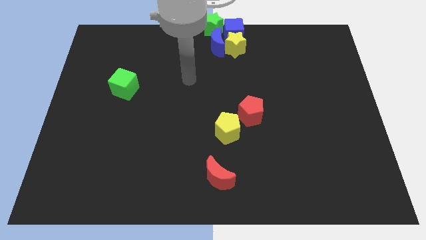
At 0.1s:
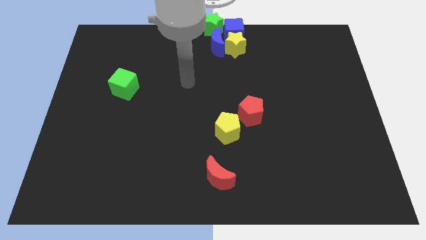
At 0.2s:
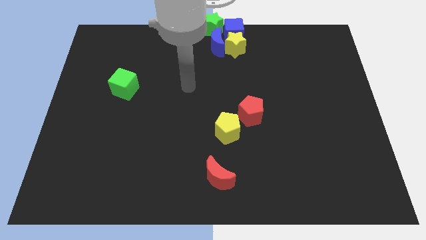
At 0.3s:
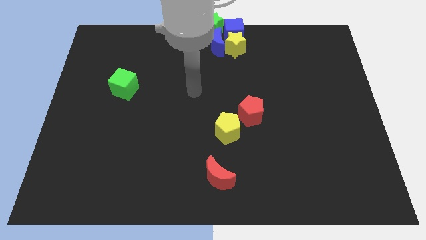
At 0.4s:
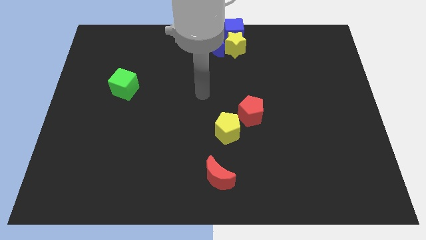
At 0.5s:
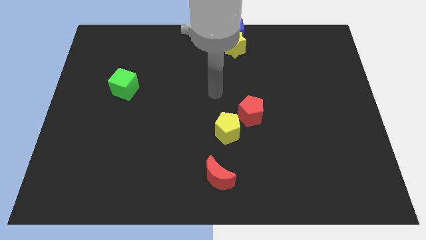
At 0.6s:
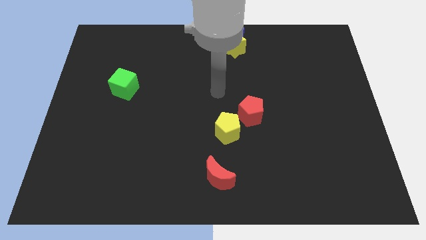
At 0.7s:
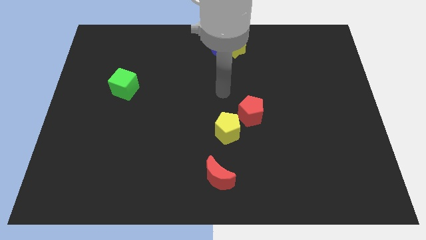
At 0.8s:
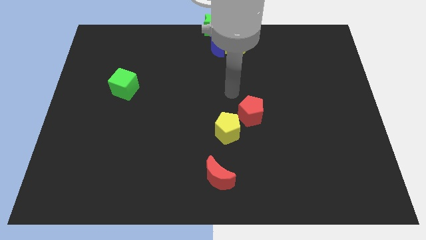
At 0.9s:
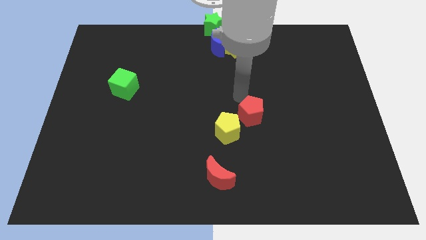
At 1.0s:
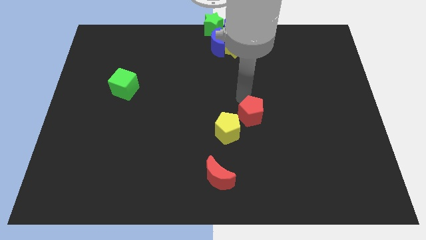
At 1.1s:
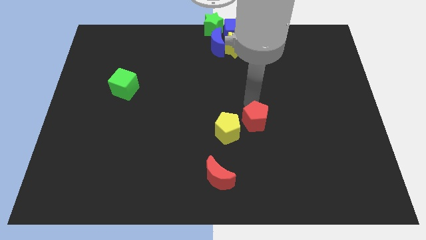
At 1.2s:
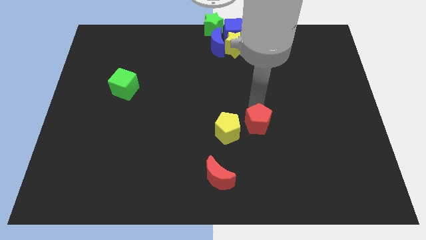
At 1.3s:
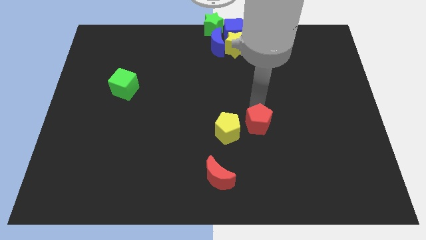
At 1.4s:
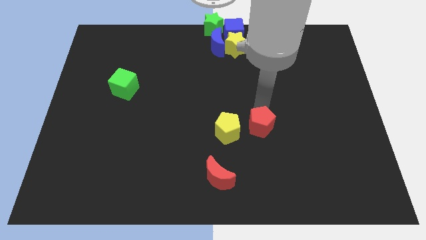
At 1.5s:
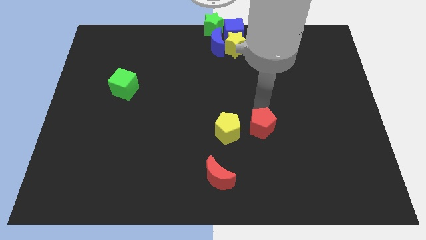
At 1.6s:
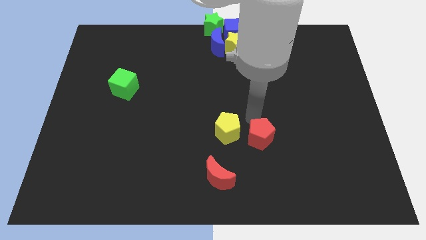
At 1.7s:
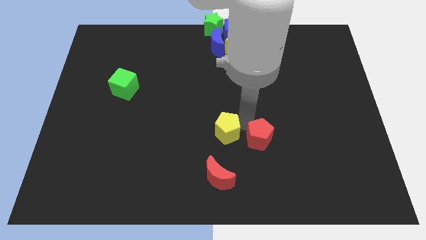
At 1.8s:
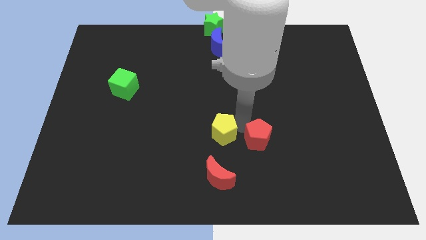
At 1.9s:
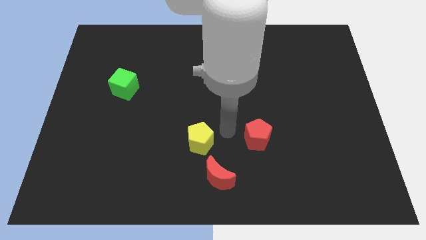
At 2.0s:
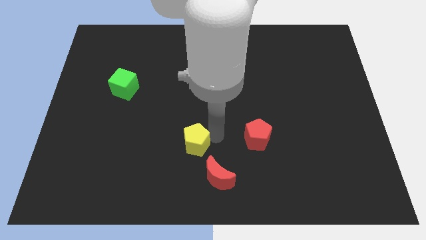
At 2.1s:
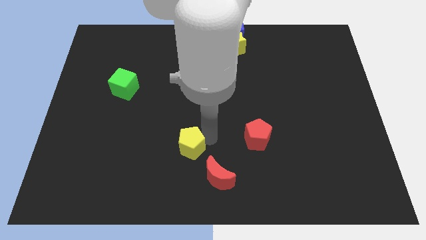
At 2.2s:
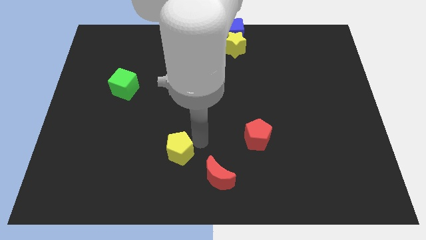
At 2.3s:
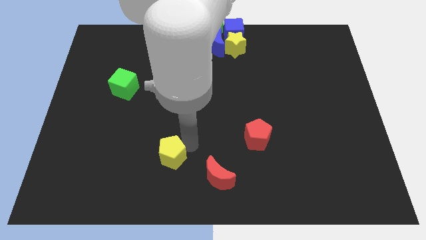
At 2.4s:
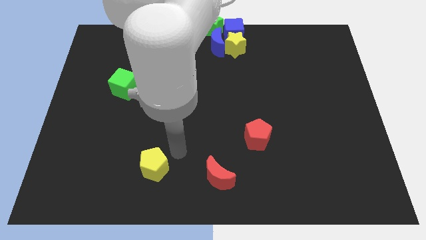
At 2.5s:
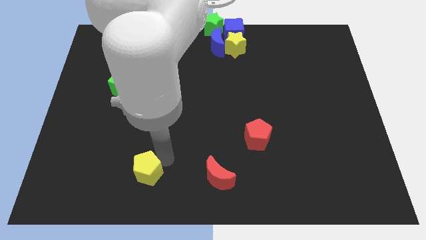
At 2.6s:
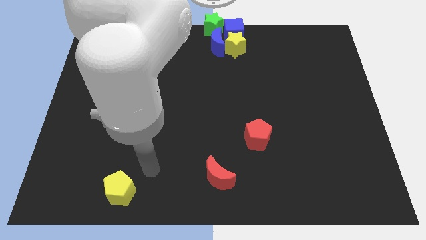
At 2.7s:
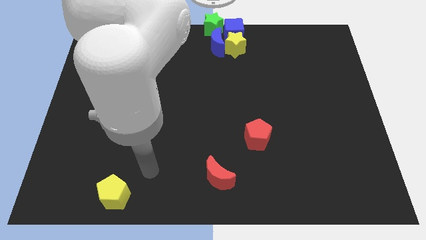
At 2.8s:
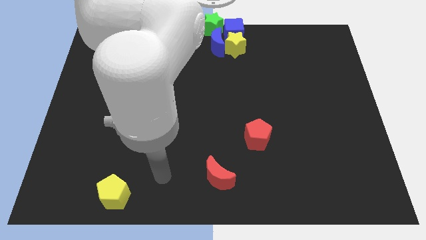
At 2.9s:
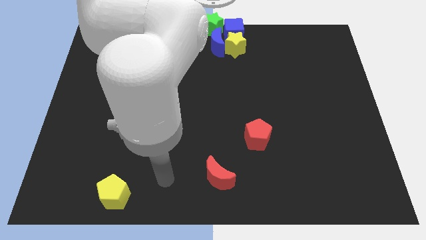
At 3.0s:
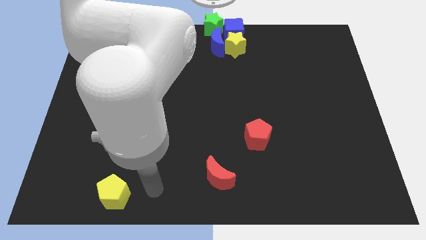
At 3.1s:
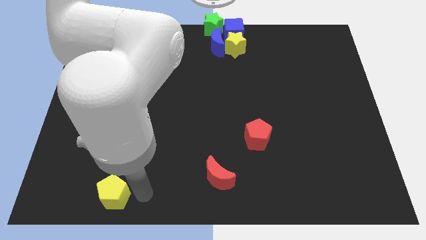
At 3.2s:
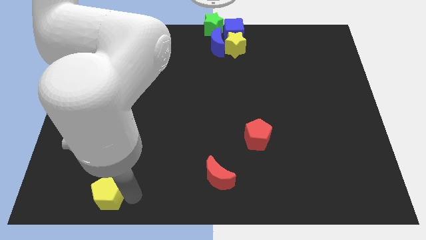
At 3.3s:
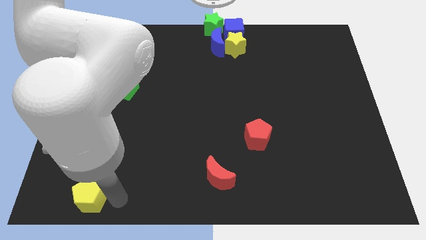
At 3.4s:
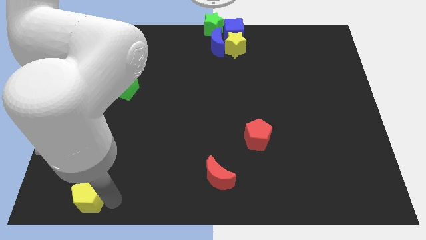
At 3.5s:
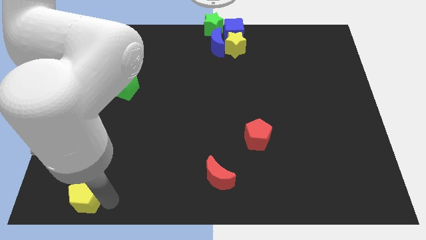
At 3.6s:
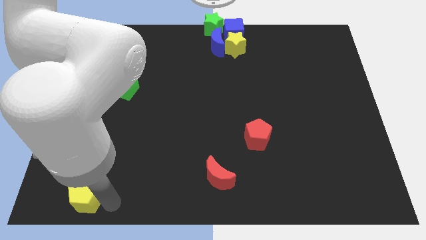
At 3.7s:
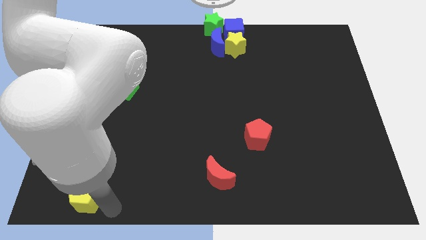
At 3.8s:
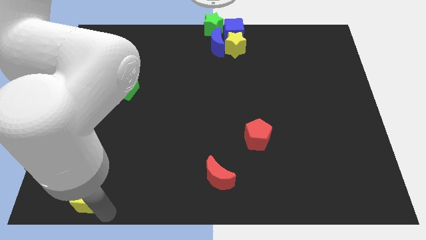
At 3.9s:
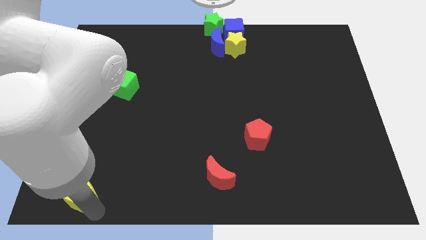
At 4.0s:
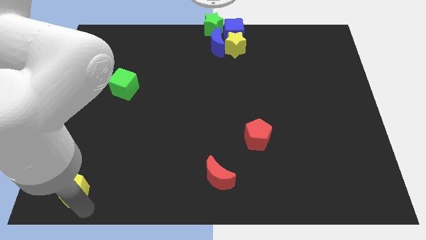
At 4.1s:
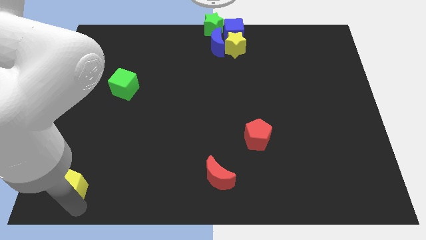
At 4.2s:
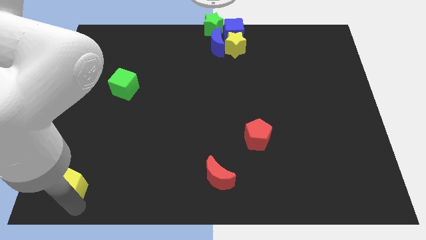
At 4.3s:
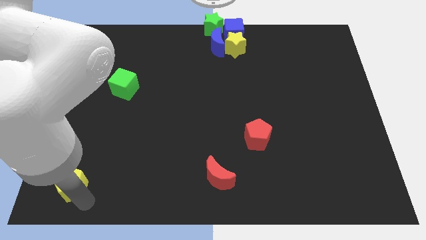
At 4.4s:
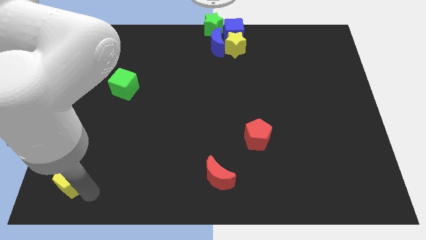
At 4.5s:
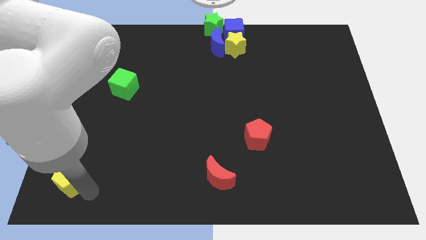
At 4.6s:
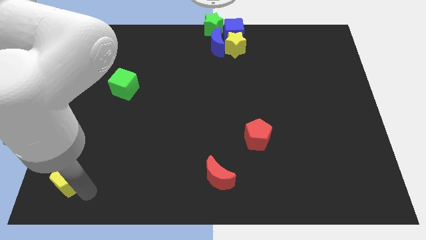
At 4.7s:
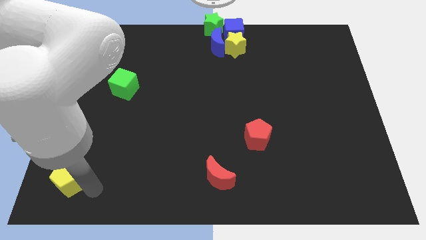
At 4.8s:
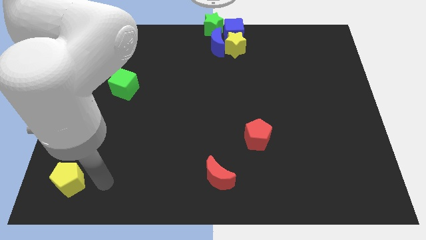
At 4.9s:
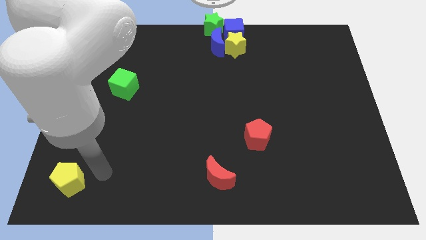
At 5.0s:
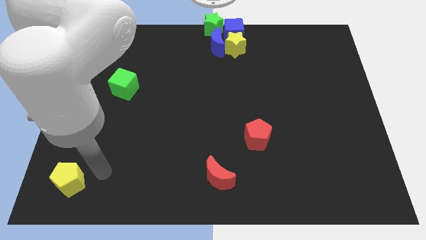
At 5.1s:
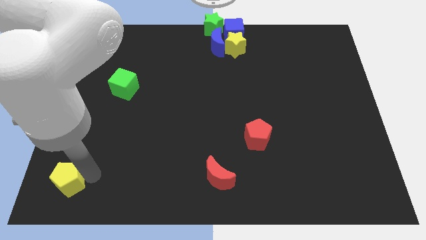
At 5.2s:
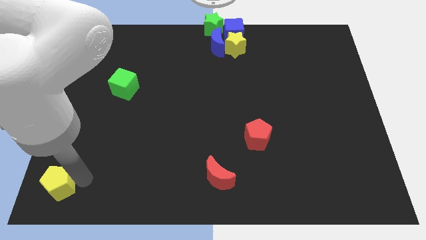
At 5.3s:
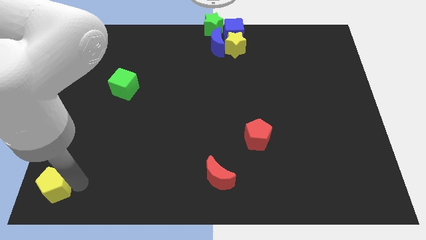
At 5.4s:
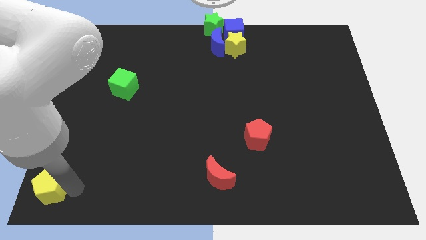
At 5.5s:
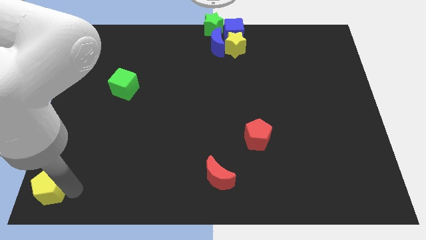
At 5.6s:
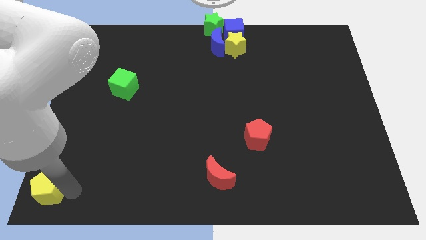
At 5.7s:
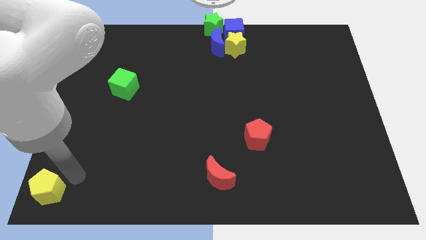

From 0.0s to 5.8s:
push the yellow pentagon towards the bottom left of the board

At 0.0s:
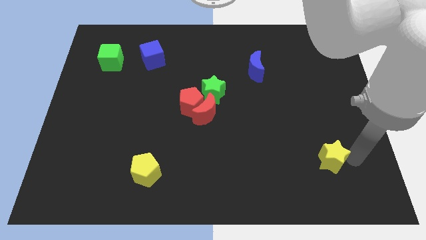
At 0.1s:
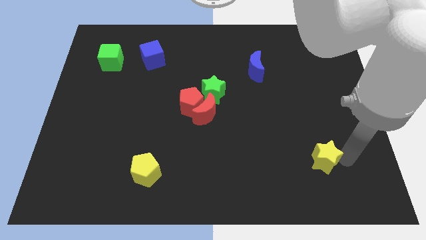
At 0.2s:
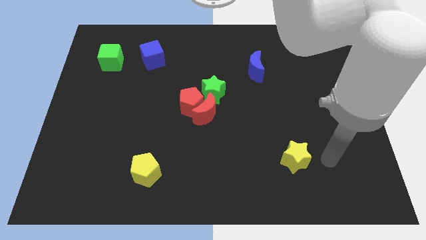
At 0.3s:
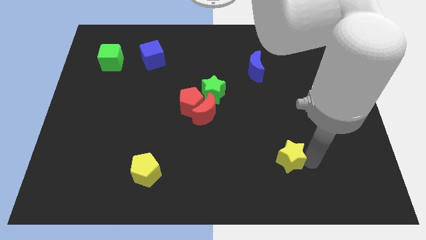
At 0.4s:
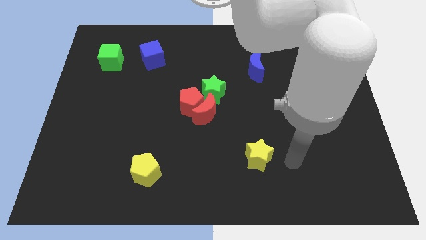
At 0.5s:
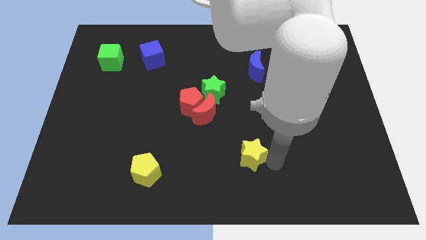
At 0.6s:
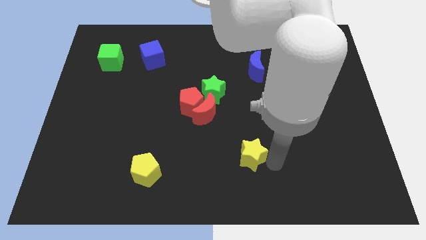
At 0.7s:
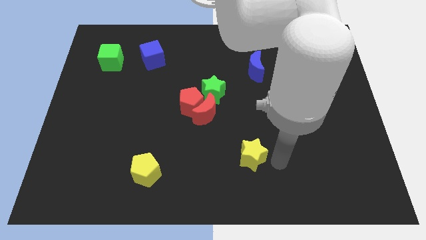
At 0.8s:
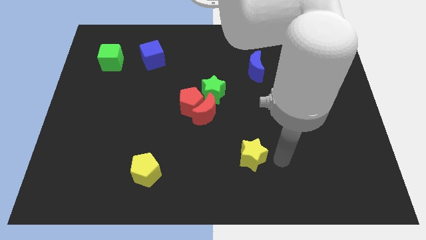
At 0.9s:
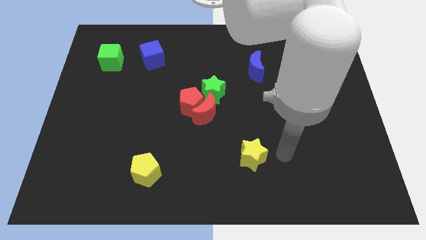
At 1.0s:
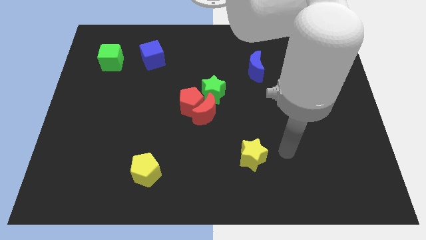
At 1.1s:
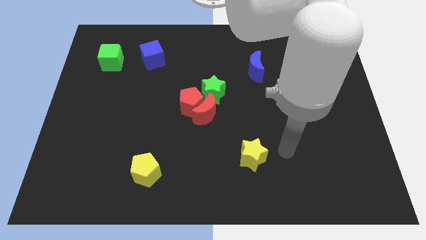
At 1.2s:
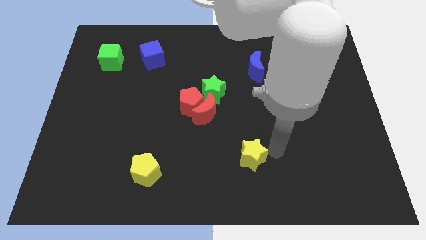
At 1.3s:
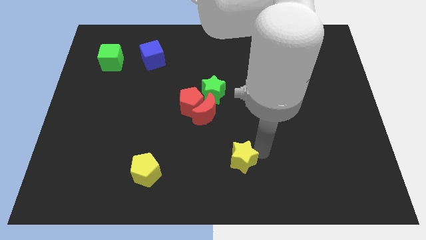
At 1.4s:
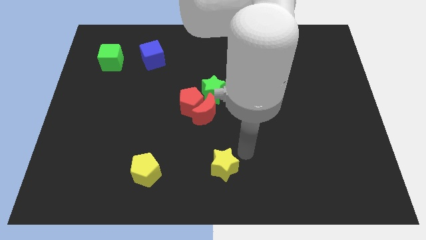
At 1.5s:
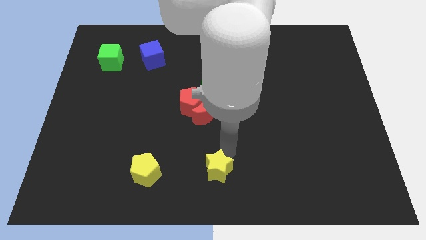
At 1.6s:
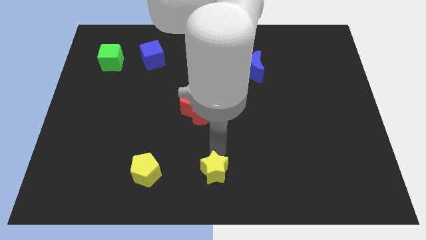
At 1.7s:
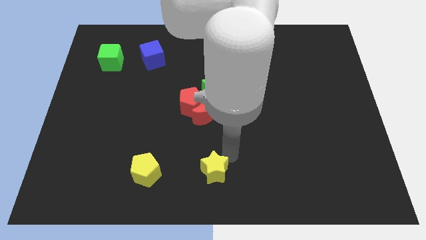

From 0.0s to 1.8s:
push the yellow star right to the yellow pentagon

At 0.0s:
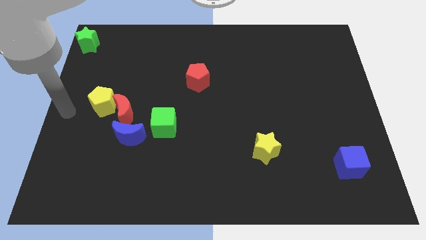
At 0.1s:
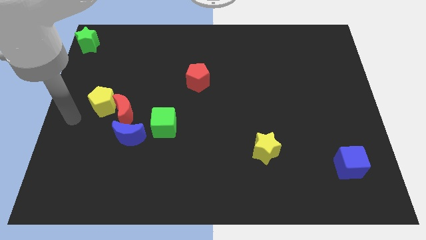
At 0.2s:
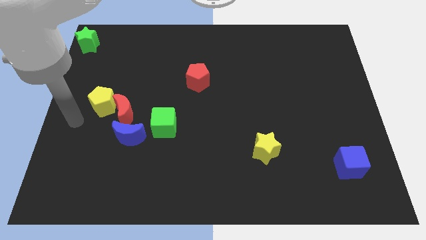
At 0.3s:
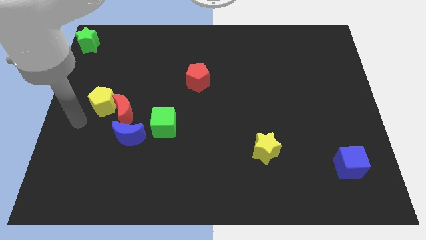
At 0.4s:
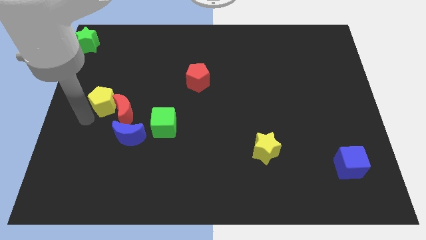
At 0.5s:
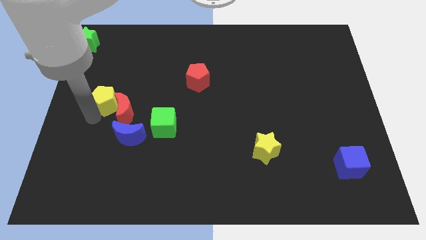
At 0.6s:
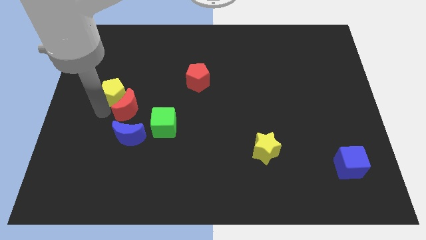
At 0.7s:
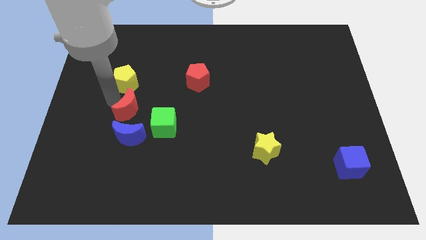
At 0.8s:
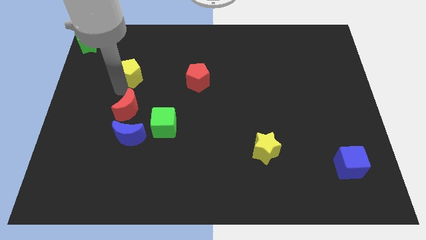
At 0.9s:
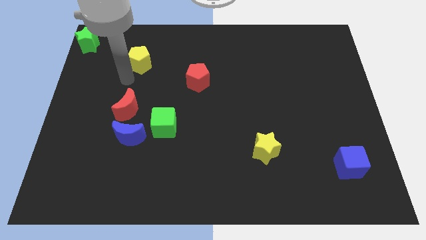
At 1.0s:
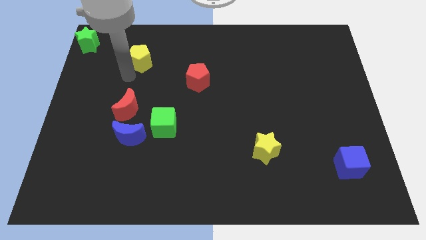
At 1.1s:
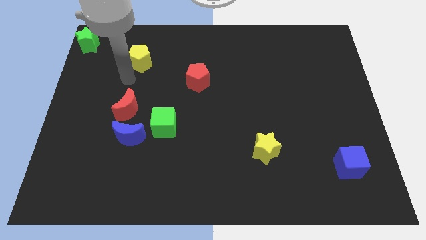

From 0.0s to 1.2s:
pull the yellow pentagon diagonal to the green star

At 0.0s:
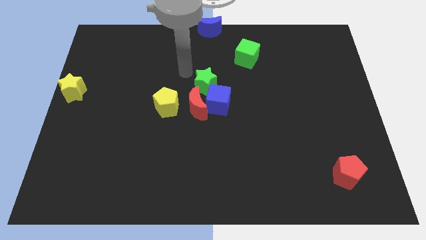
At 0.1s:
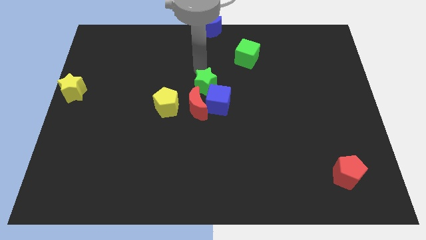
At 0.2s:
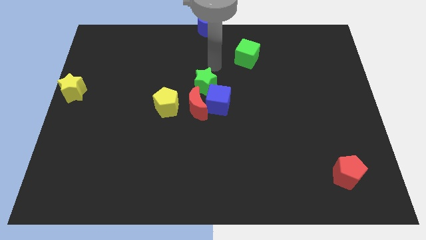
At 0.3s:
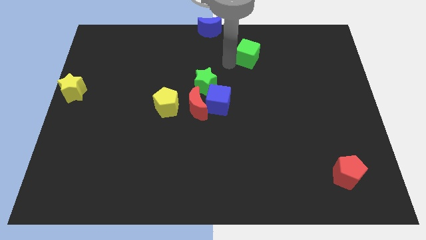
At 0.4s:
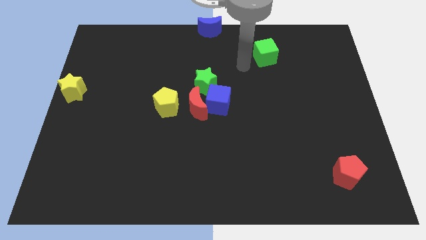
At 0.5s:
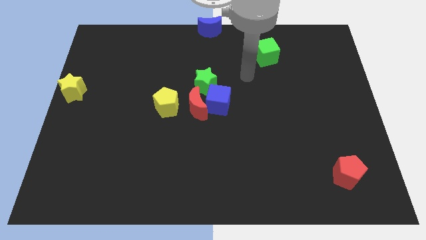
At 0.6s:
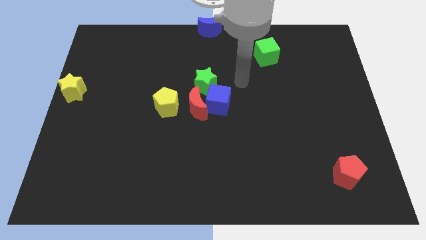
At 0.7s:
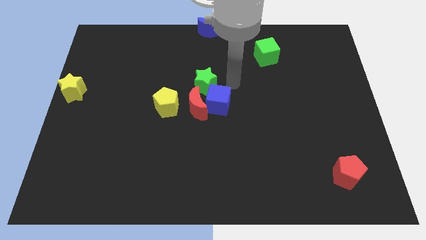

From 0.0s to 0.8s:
push the green cube slightly towards the right
